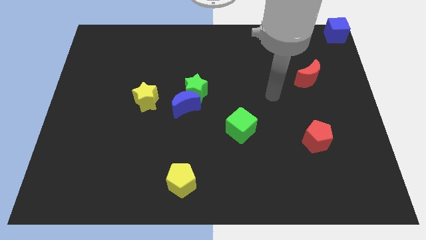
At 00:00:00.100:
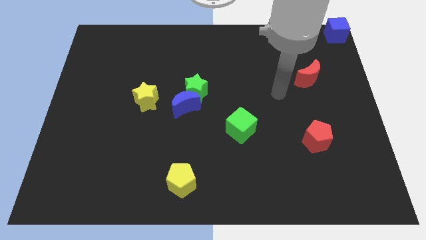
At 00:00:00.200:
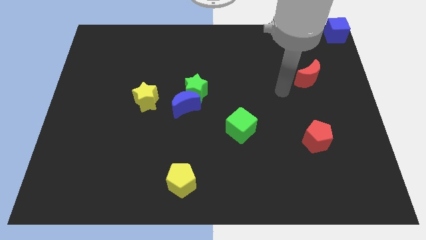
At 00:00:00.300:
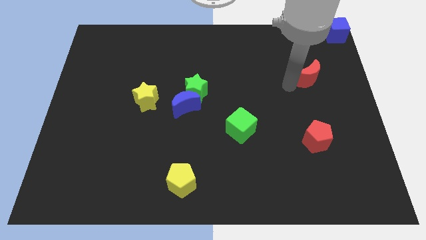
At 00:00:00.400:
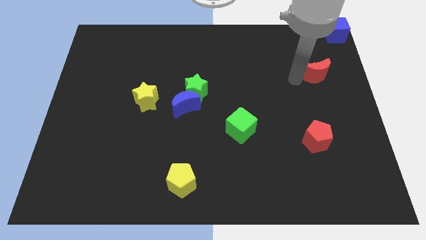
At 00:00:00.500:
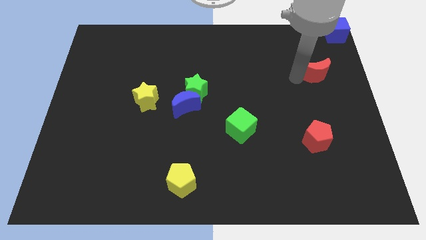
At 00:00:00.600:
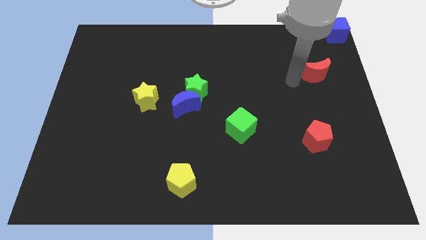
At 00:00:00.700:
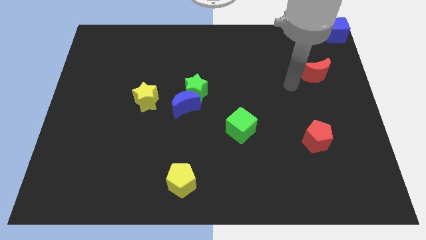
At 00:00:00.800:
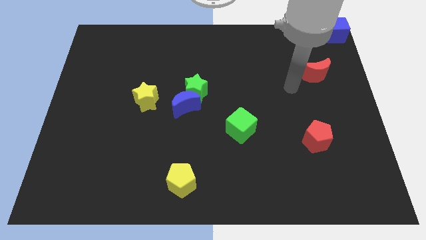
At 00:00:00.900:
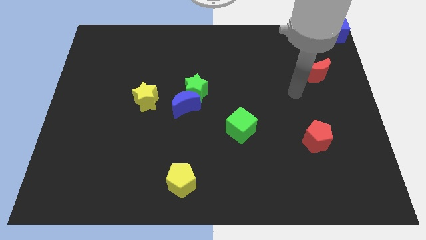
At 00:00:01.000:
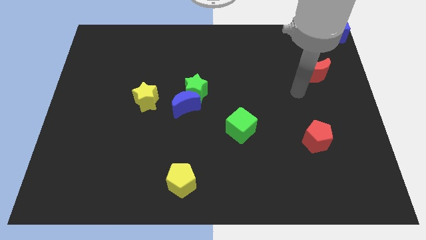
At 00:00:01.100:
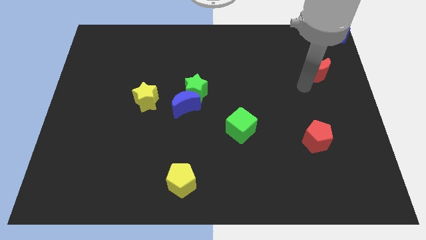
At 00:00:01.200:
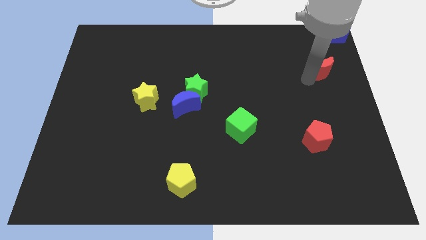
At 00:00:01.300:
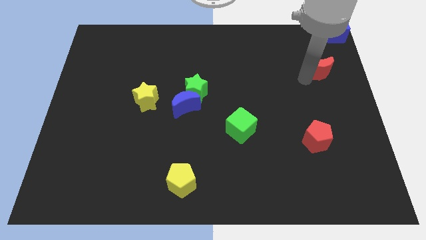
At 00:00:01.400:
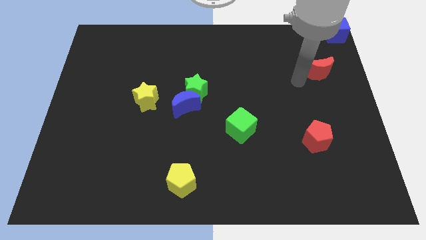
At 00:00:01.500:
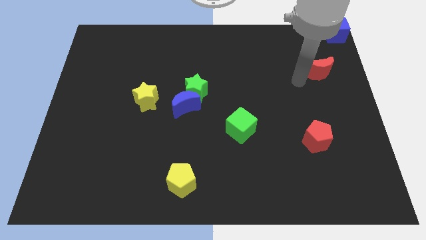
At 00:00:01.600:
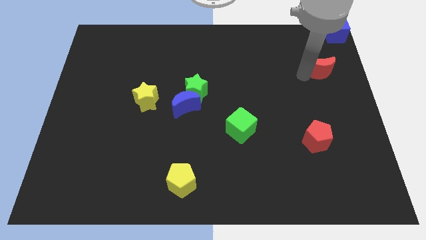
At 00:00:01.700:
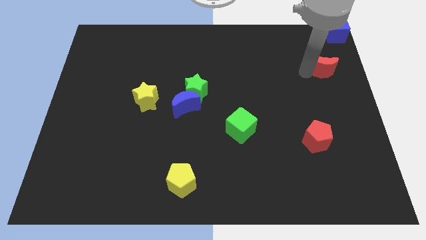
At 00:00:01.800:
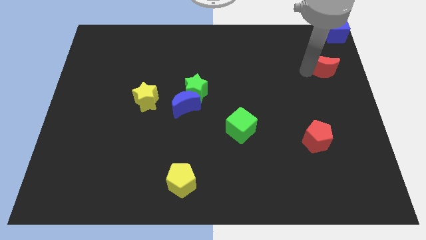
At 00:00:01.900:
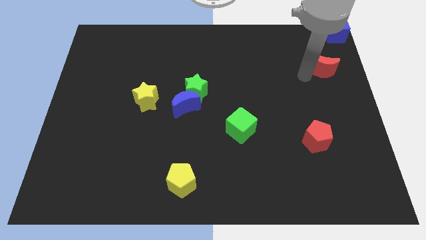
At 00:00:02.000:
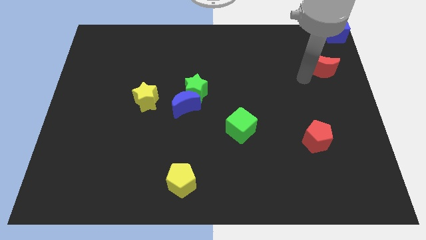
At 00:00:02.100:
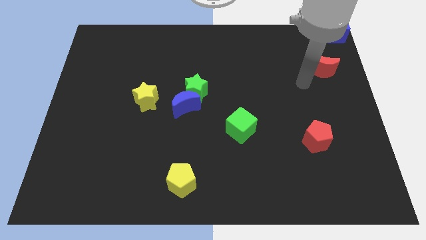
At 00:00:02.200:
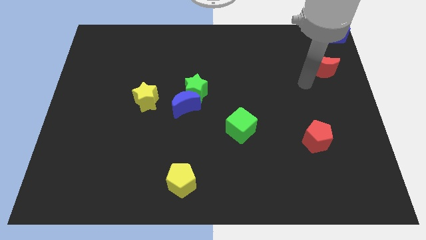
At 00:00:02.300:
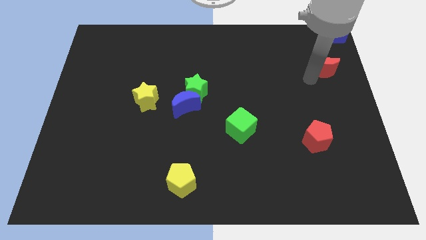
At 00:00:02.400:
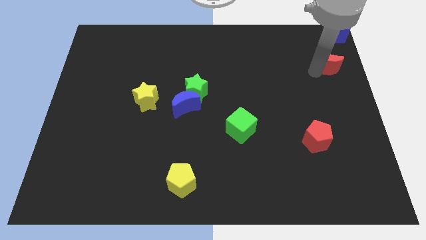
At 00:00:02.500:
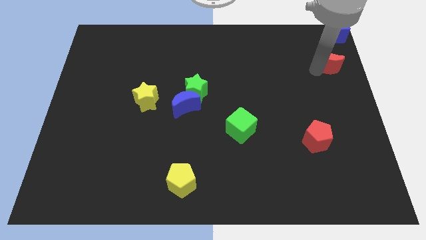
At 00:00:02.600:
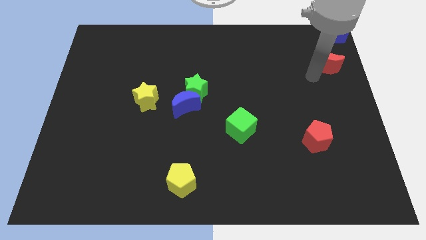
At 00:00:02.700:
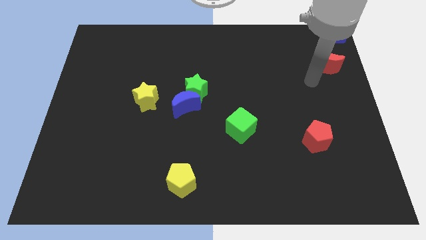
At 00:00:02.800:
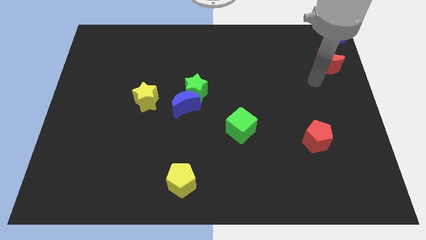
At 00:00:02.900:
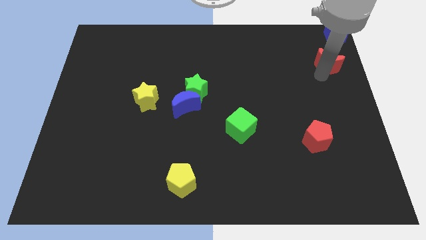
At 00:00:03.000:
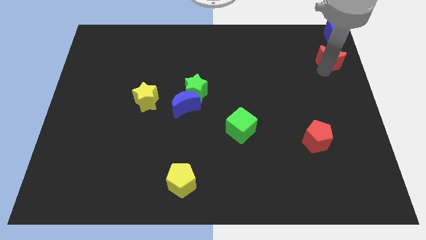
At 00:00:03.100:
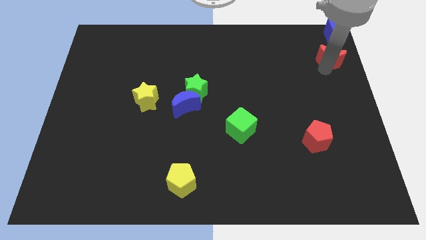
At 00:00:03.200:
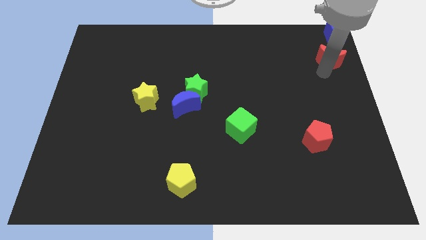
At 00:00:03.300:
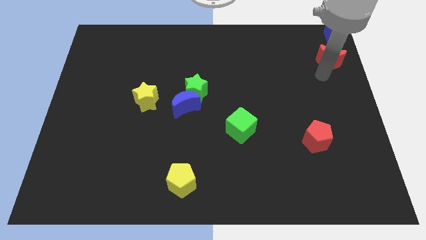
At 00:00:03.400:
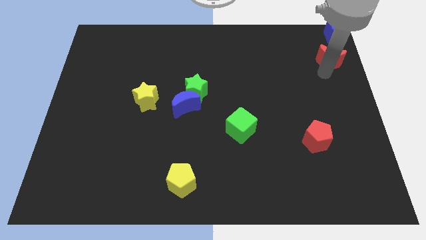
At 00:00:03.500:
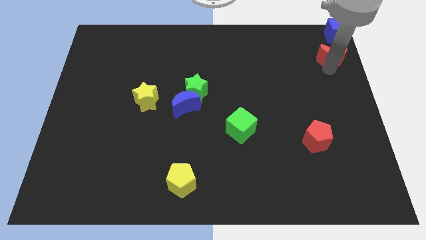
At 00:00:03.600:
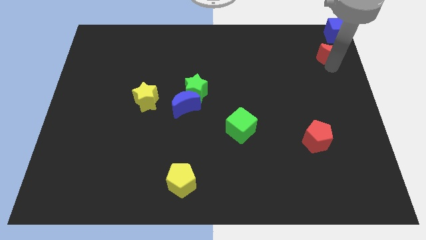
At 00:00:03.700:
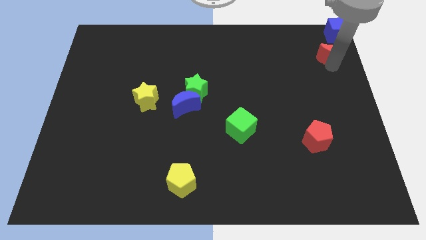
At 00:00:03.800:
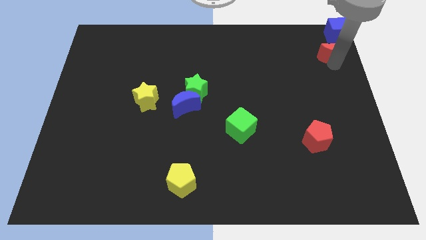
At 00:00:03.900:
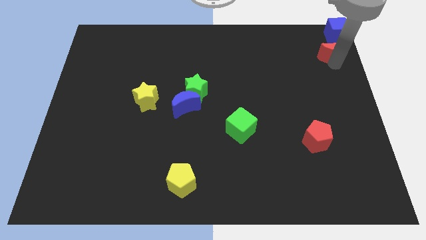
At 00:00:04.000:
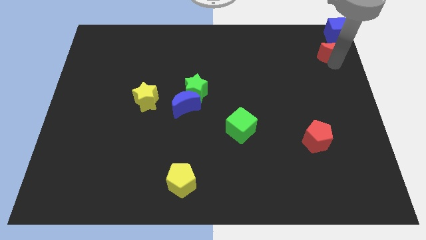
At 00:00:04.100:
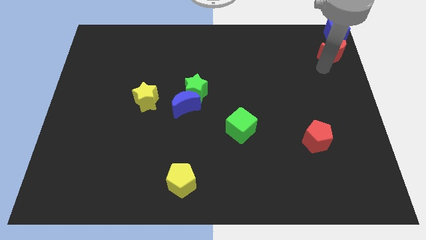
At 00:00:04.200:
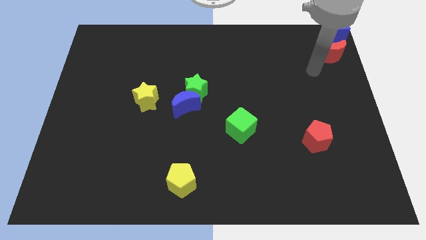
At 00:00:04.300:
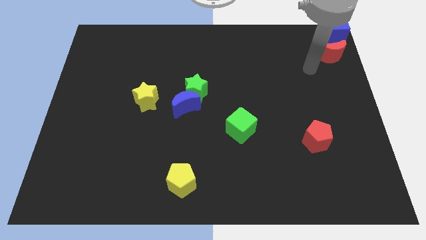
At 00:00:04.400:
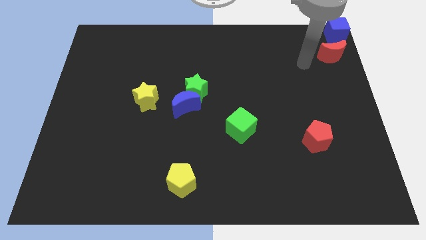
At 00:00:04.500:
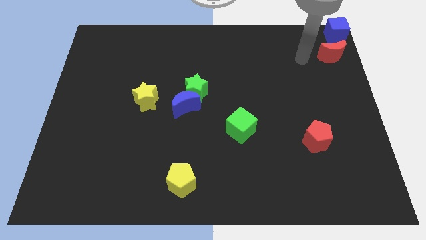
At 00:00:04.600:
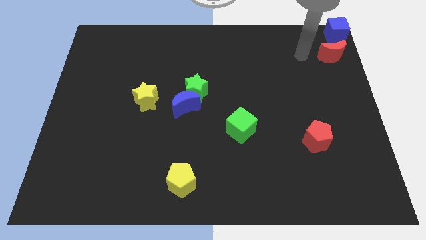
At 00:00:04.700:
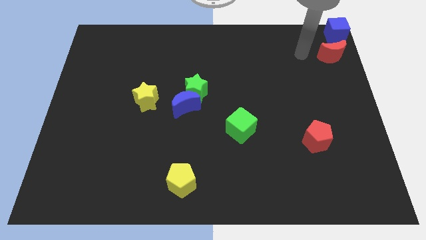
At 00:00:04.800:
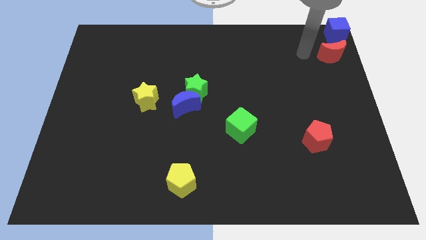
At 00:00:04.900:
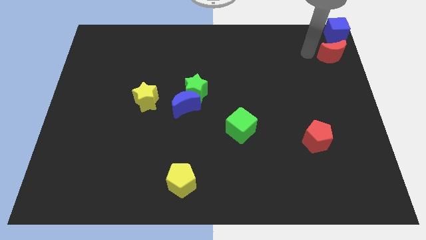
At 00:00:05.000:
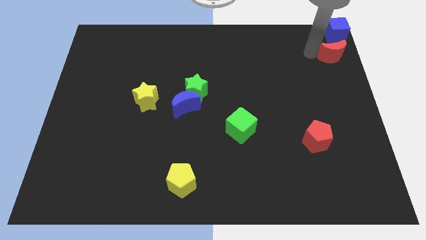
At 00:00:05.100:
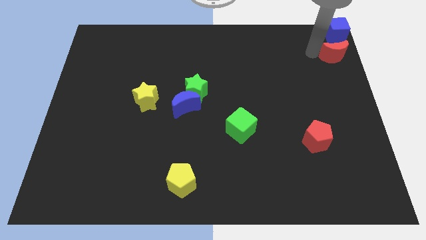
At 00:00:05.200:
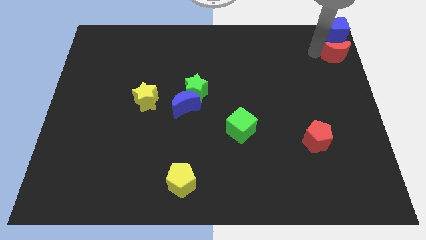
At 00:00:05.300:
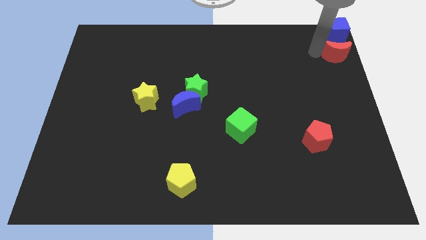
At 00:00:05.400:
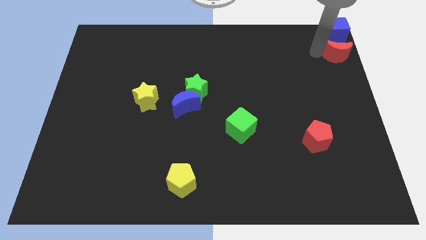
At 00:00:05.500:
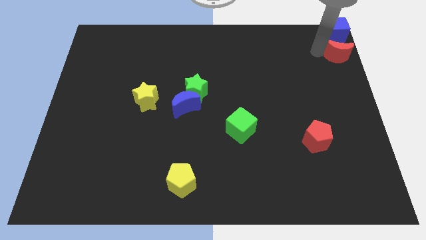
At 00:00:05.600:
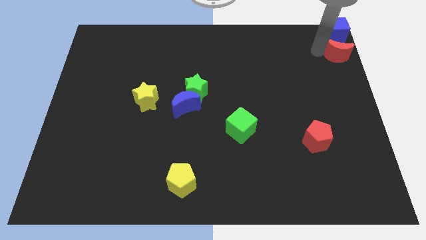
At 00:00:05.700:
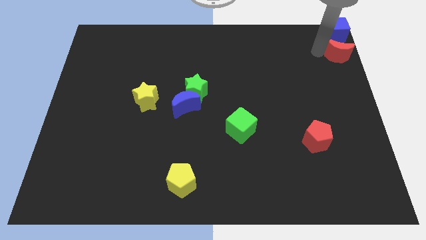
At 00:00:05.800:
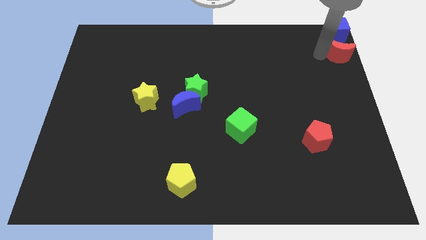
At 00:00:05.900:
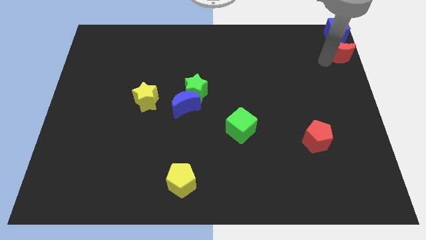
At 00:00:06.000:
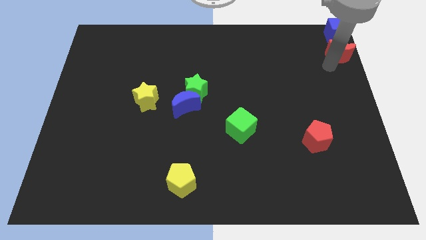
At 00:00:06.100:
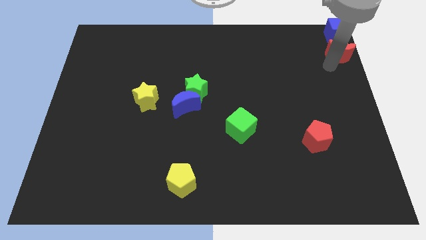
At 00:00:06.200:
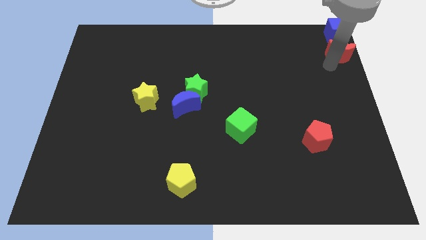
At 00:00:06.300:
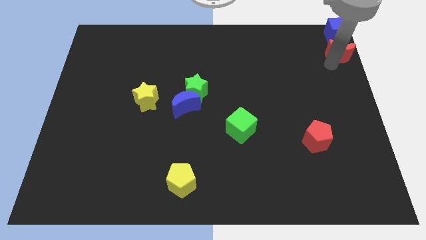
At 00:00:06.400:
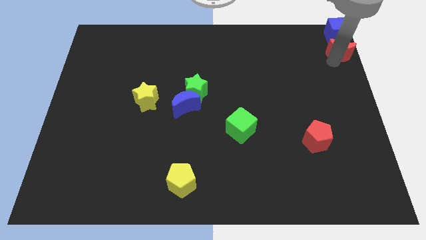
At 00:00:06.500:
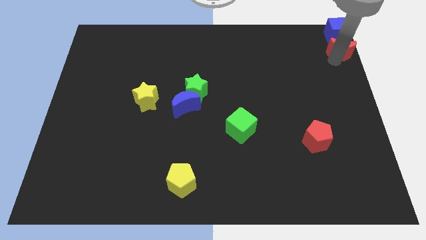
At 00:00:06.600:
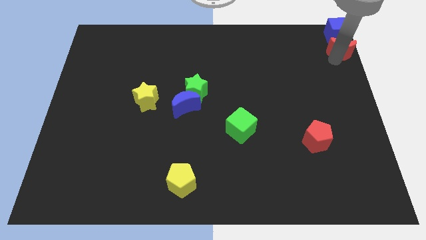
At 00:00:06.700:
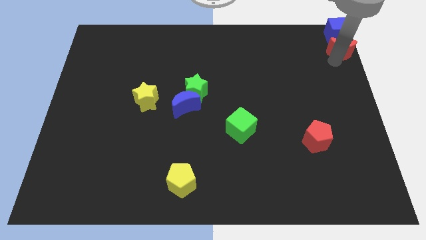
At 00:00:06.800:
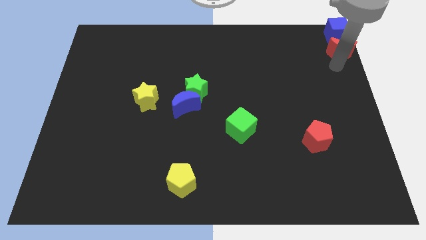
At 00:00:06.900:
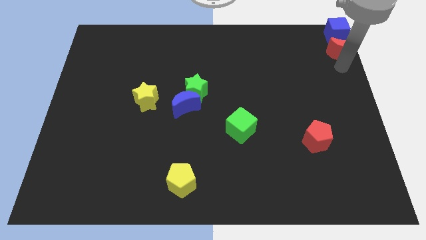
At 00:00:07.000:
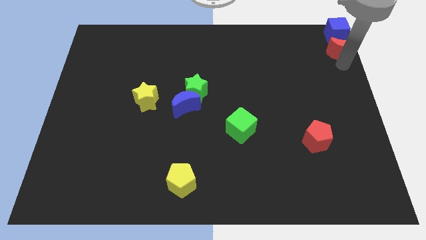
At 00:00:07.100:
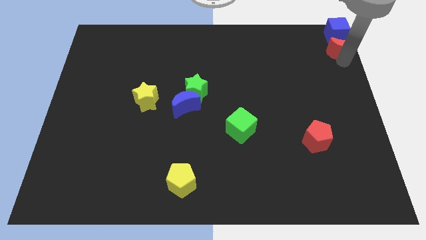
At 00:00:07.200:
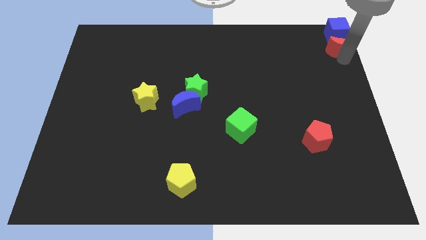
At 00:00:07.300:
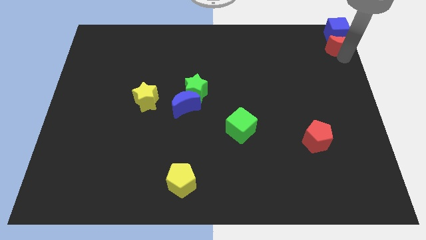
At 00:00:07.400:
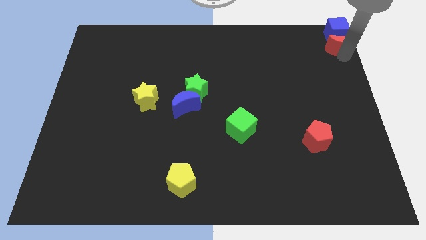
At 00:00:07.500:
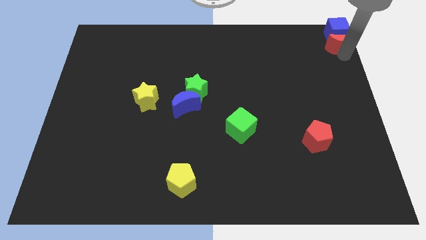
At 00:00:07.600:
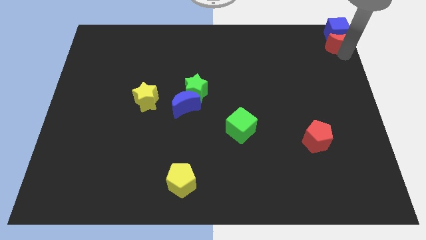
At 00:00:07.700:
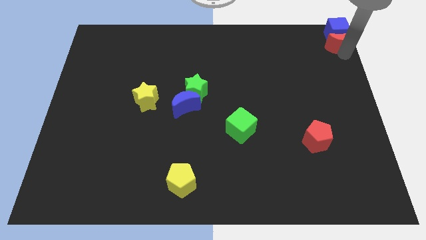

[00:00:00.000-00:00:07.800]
move the red moon below the blue block at the top right side

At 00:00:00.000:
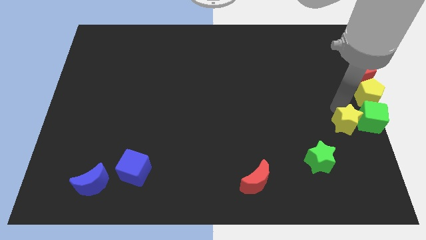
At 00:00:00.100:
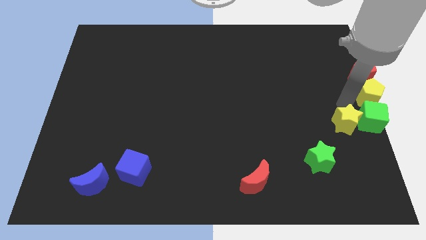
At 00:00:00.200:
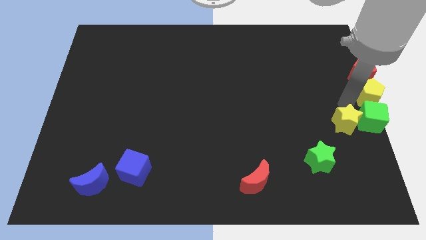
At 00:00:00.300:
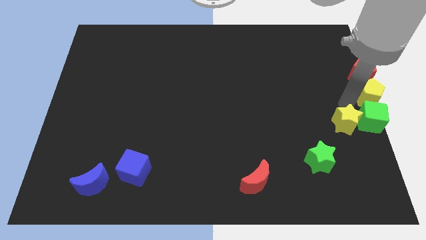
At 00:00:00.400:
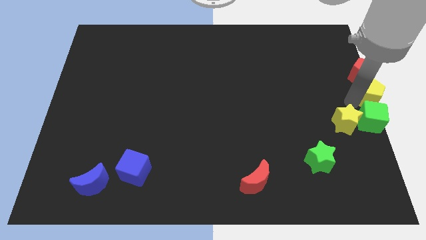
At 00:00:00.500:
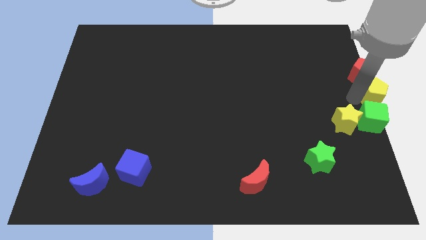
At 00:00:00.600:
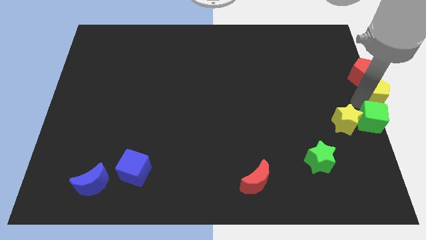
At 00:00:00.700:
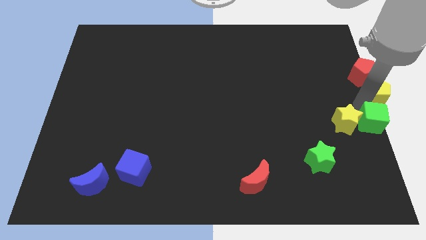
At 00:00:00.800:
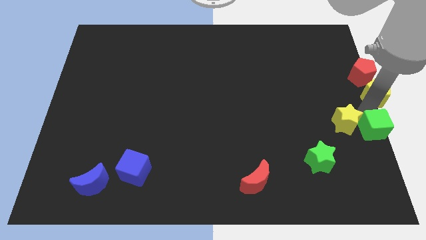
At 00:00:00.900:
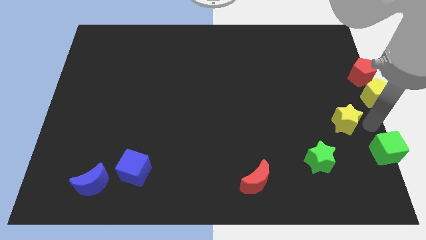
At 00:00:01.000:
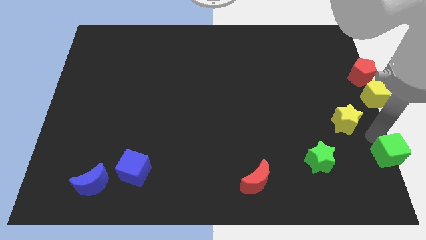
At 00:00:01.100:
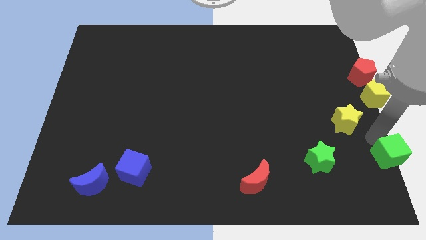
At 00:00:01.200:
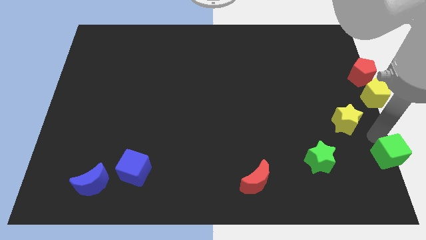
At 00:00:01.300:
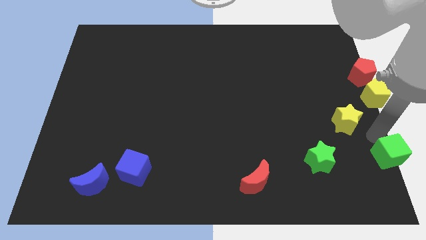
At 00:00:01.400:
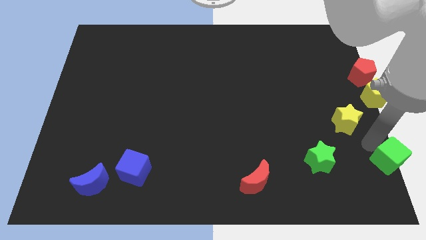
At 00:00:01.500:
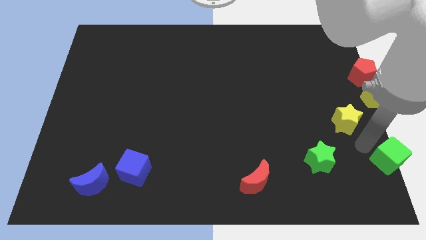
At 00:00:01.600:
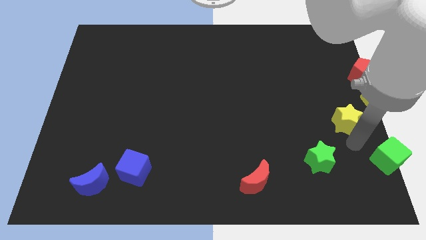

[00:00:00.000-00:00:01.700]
slightly push the green cube to the bottom right corner
